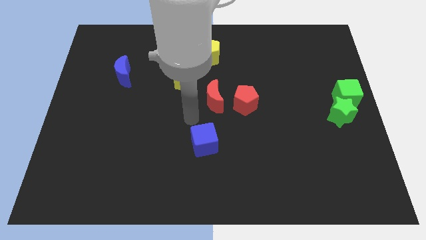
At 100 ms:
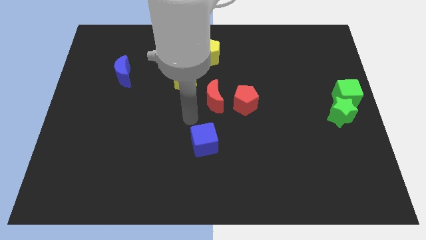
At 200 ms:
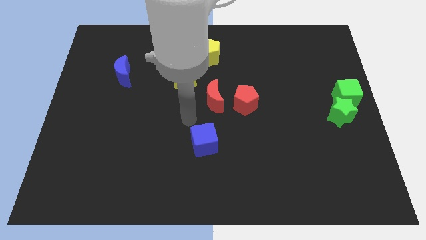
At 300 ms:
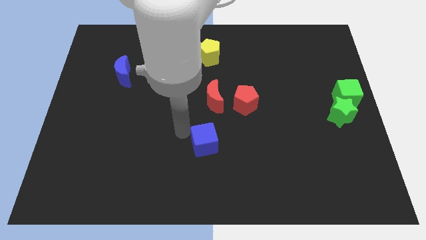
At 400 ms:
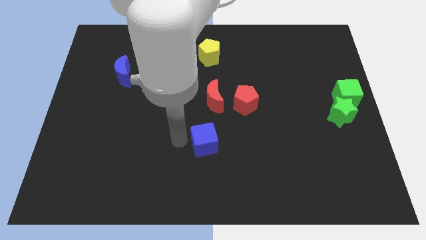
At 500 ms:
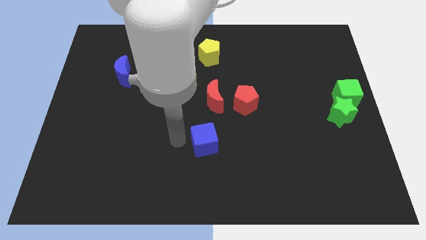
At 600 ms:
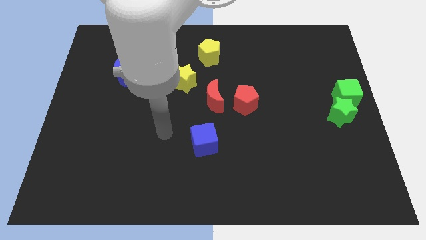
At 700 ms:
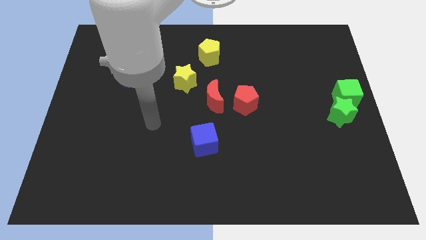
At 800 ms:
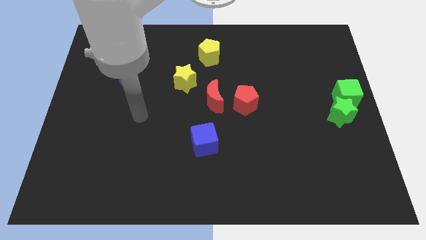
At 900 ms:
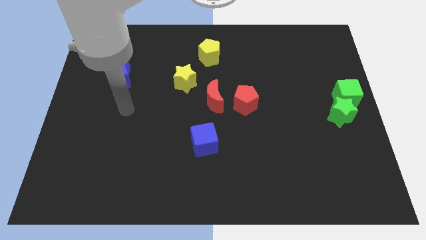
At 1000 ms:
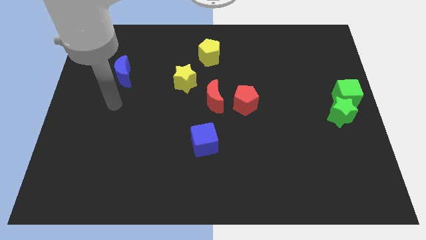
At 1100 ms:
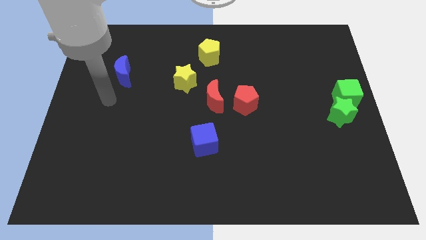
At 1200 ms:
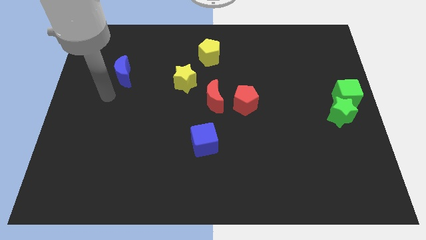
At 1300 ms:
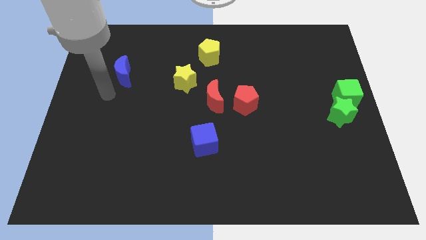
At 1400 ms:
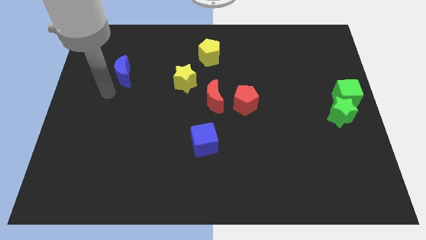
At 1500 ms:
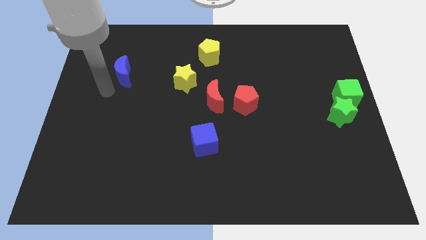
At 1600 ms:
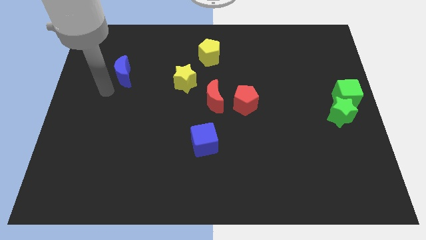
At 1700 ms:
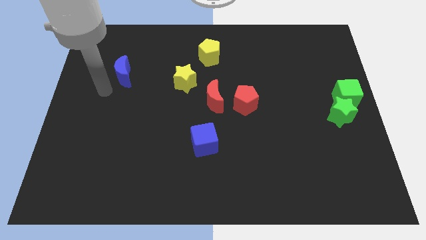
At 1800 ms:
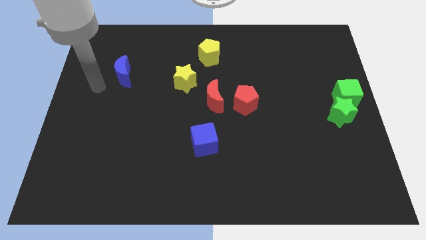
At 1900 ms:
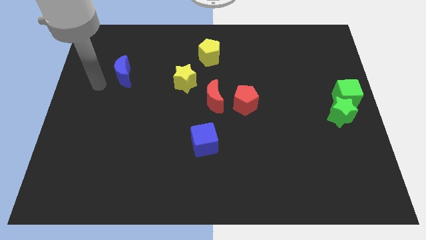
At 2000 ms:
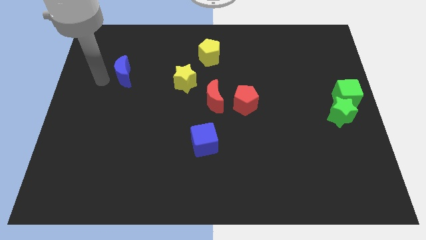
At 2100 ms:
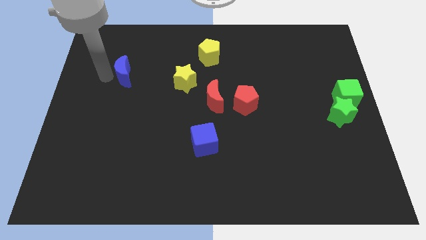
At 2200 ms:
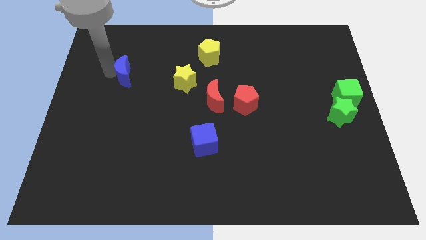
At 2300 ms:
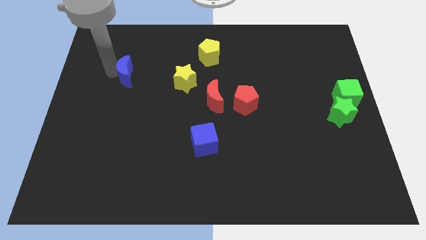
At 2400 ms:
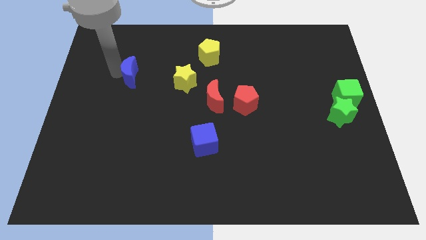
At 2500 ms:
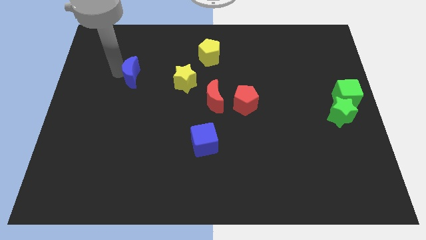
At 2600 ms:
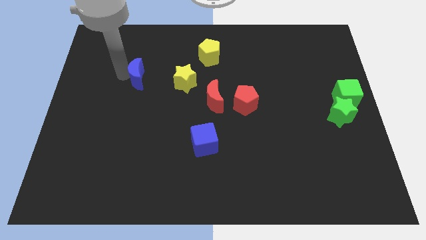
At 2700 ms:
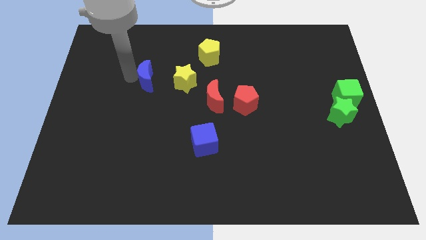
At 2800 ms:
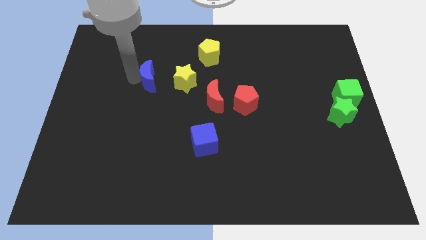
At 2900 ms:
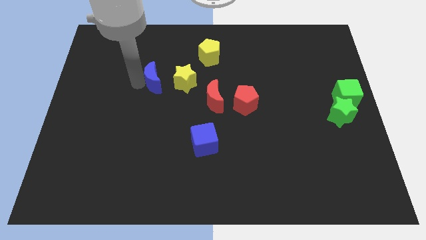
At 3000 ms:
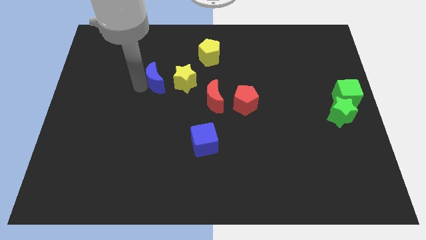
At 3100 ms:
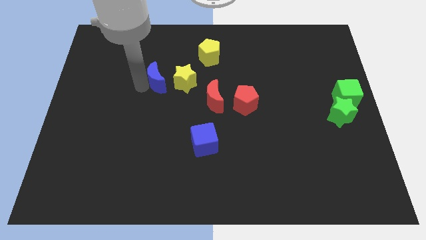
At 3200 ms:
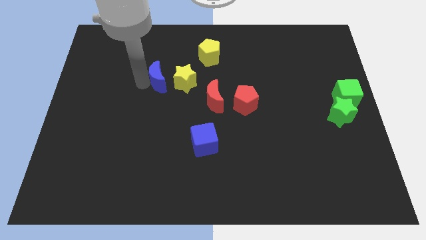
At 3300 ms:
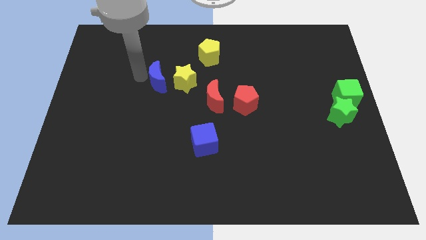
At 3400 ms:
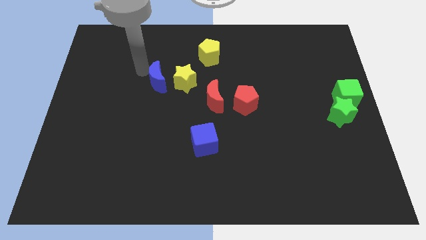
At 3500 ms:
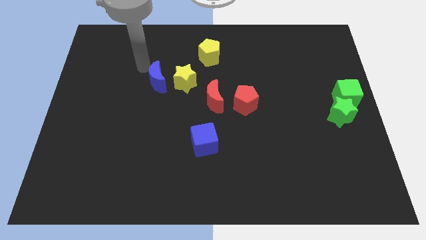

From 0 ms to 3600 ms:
move the blue crescent to the left of the yellow star

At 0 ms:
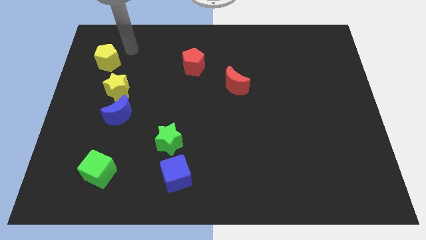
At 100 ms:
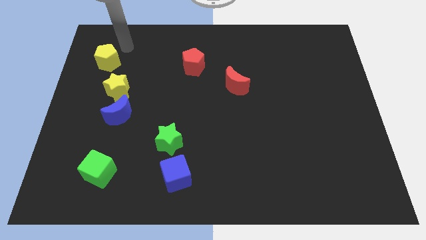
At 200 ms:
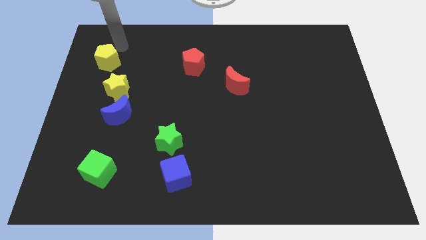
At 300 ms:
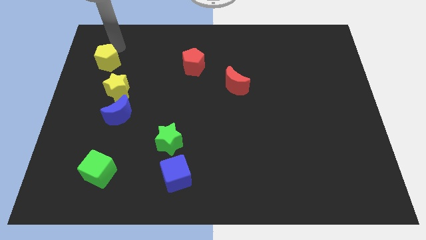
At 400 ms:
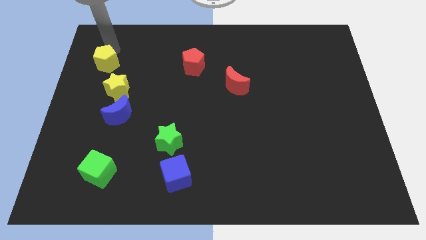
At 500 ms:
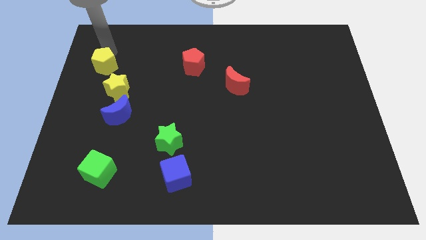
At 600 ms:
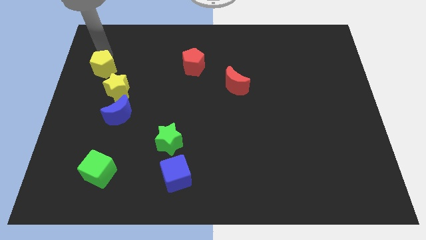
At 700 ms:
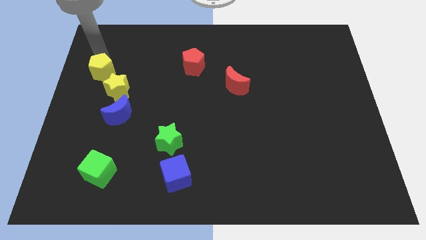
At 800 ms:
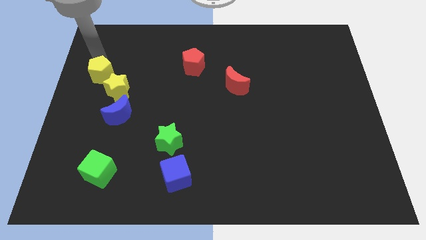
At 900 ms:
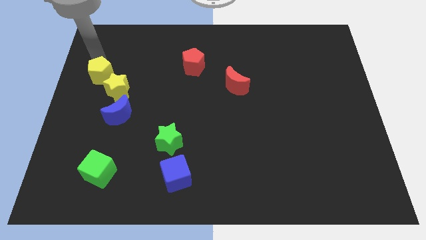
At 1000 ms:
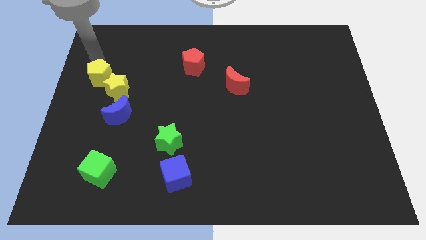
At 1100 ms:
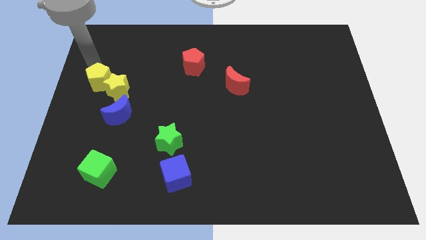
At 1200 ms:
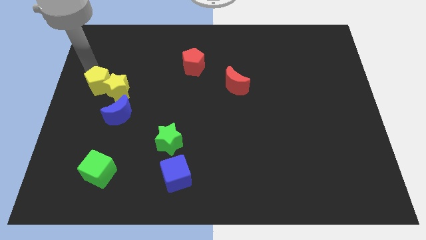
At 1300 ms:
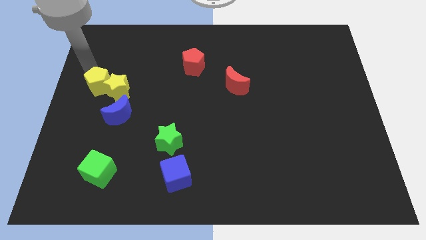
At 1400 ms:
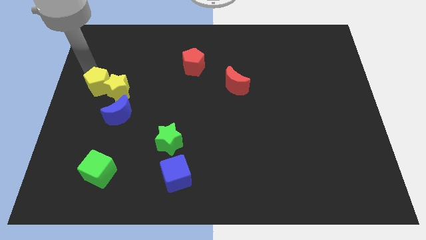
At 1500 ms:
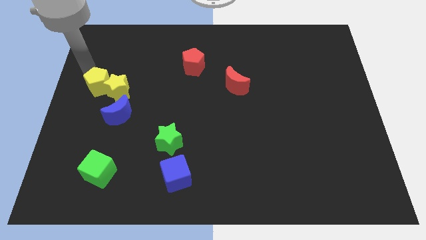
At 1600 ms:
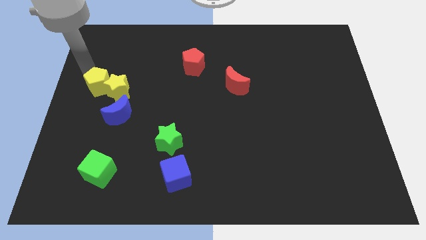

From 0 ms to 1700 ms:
slide the yellow pentagon into the yellow star

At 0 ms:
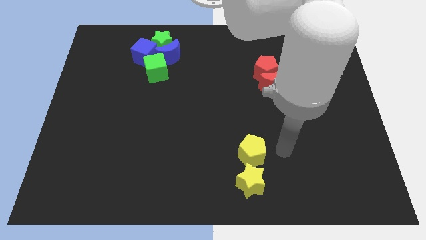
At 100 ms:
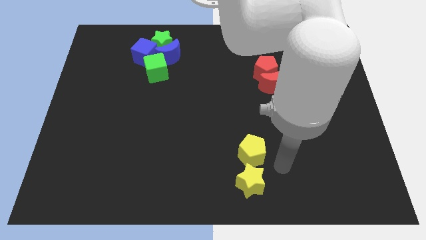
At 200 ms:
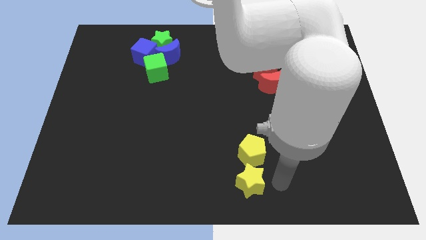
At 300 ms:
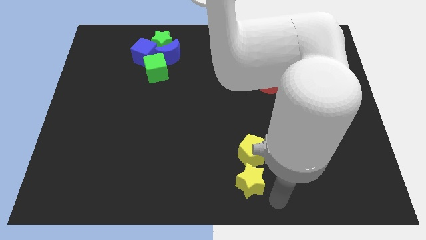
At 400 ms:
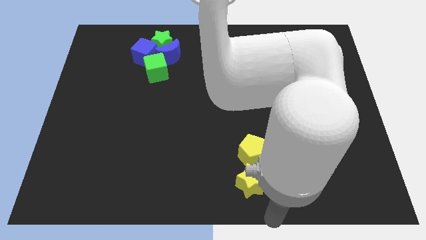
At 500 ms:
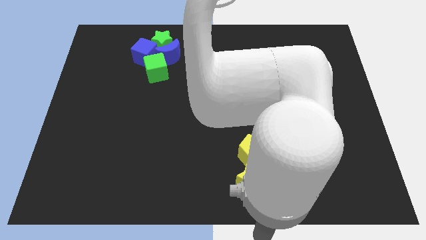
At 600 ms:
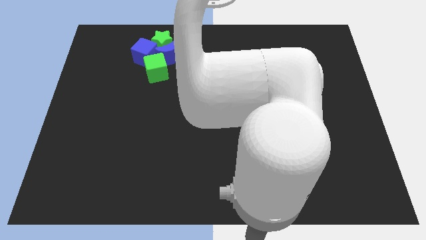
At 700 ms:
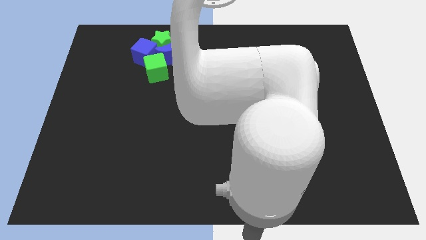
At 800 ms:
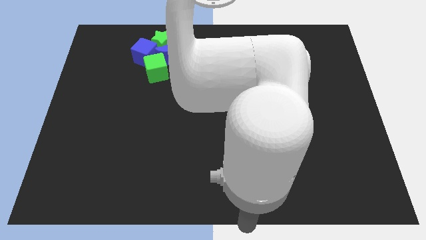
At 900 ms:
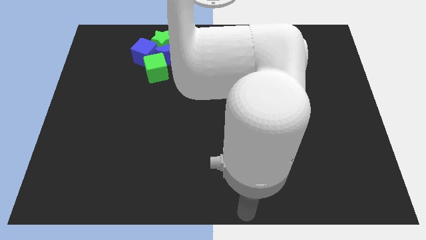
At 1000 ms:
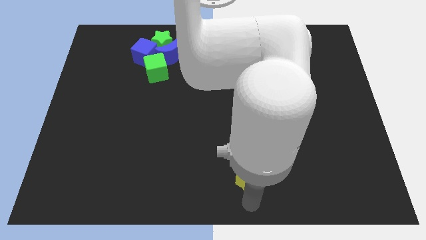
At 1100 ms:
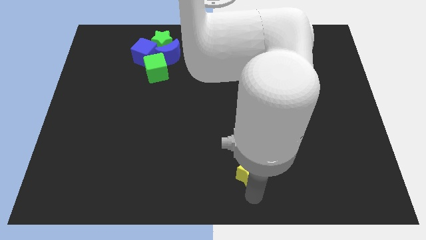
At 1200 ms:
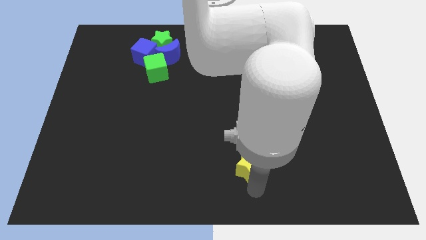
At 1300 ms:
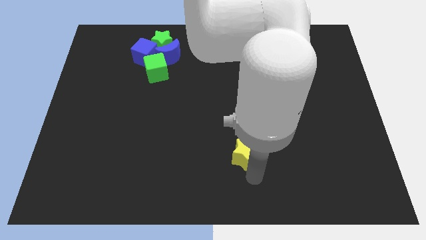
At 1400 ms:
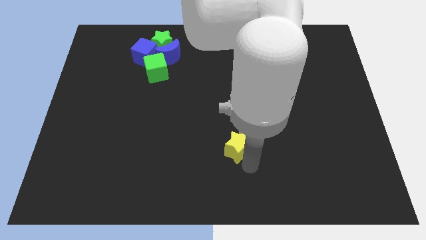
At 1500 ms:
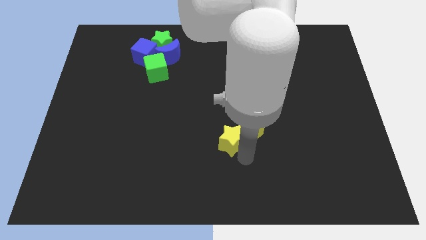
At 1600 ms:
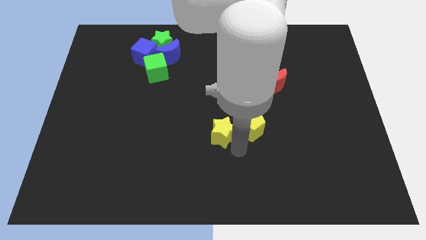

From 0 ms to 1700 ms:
move the yellow star left to the yellow pentagon

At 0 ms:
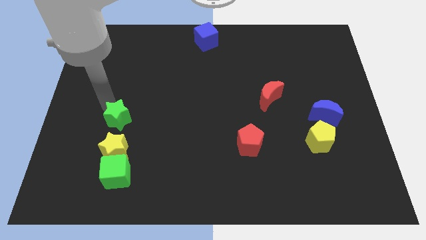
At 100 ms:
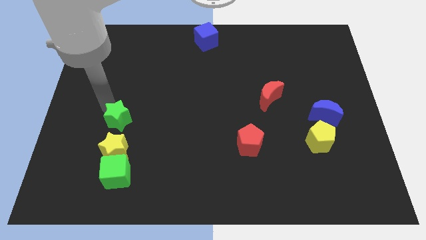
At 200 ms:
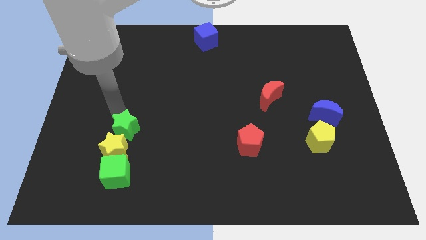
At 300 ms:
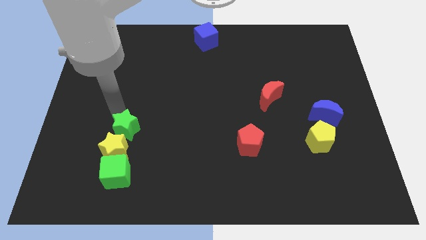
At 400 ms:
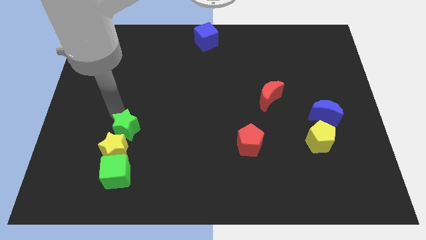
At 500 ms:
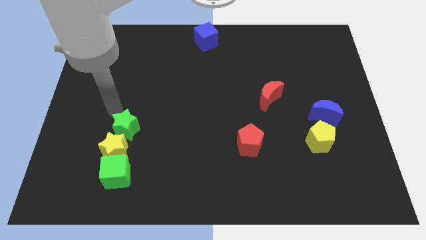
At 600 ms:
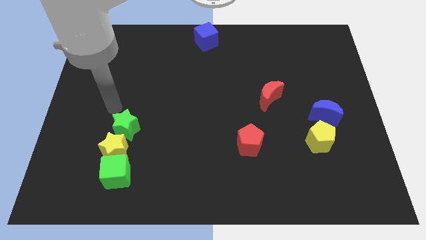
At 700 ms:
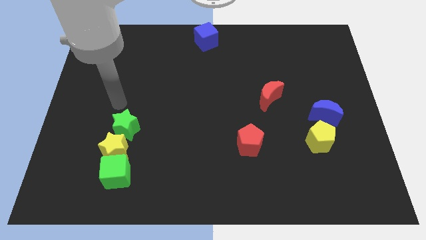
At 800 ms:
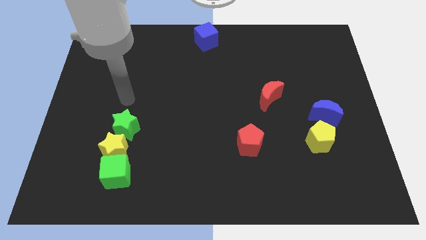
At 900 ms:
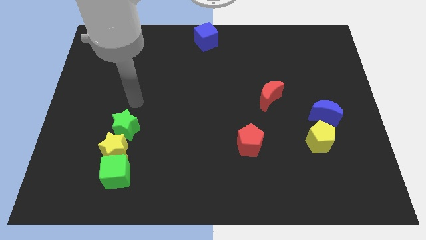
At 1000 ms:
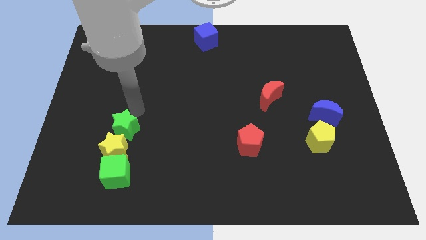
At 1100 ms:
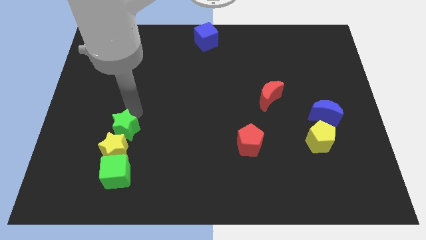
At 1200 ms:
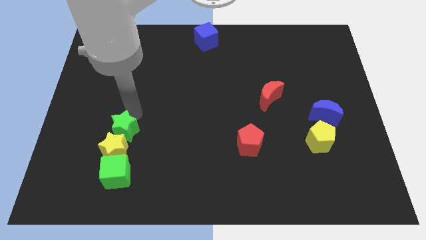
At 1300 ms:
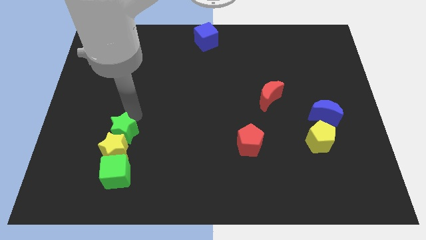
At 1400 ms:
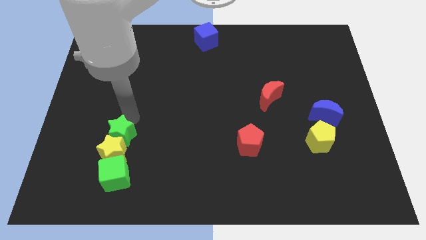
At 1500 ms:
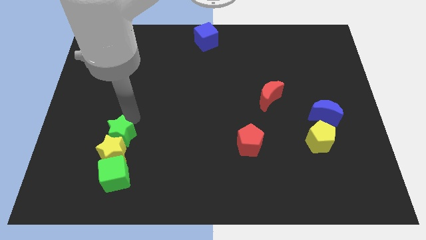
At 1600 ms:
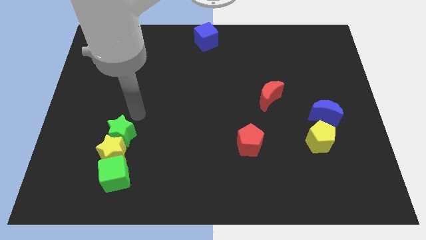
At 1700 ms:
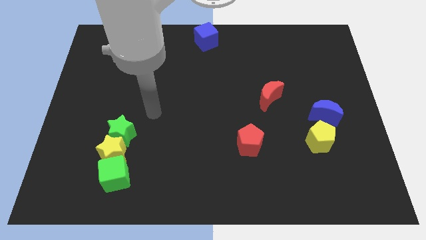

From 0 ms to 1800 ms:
push the green star into the yellow star
